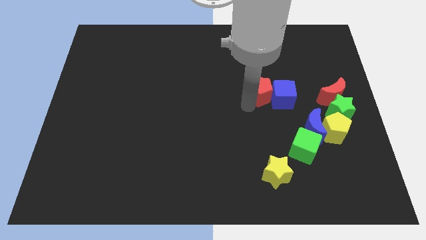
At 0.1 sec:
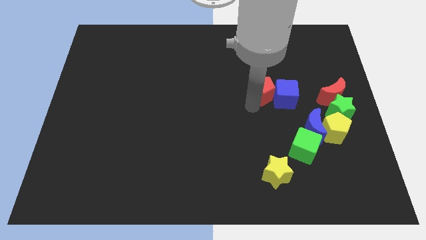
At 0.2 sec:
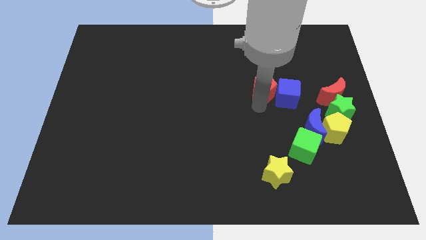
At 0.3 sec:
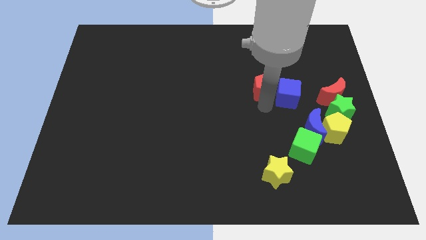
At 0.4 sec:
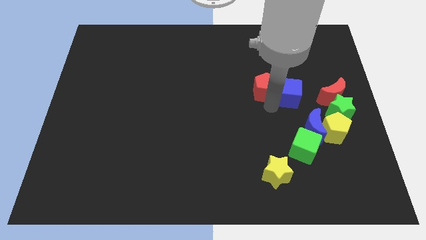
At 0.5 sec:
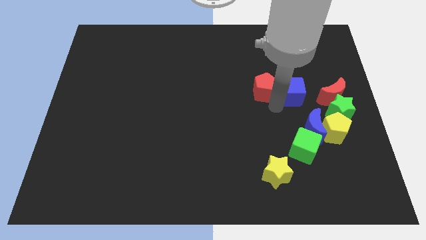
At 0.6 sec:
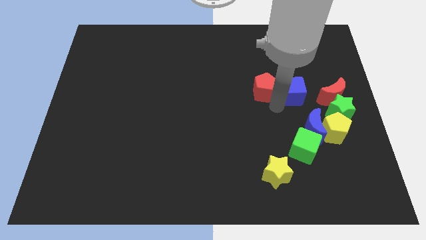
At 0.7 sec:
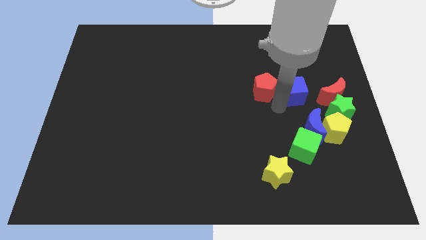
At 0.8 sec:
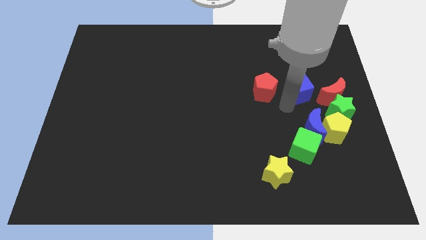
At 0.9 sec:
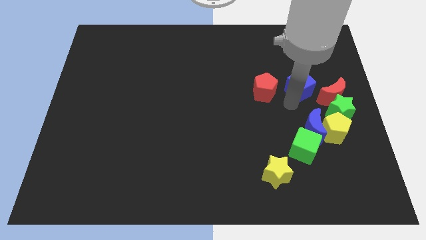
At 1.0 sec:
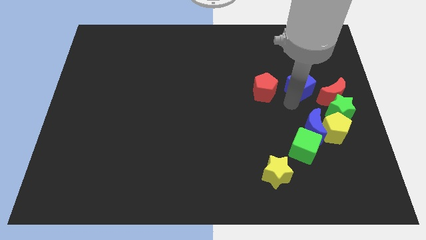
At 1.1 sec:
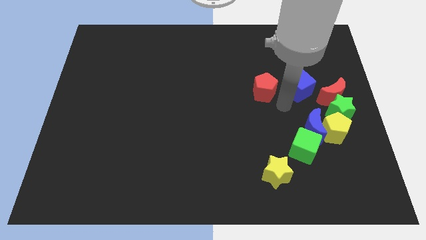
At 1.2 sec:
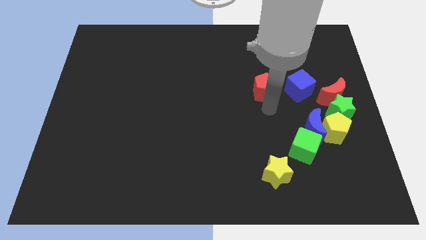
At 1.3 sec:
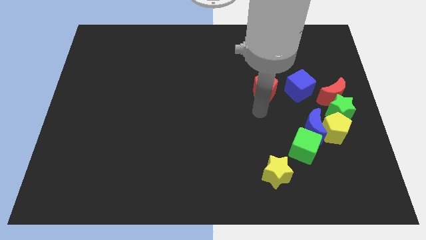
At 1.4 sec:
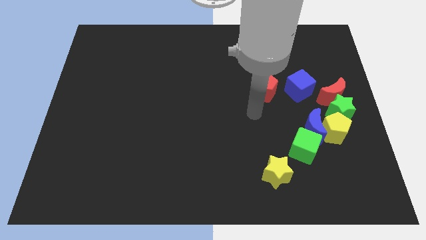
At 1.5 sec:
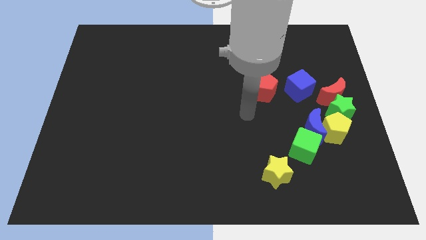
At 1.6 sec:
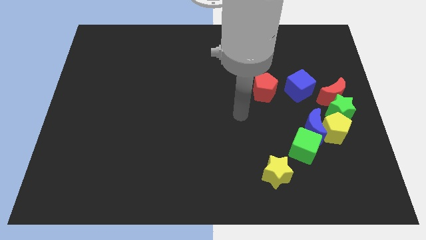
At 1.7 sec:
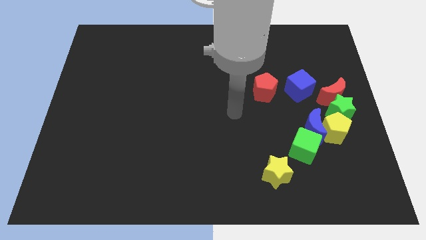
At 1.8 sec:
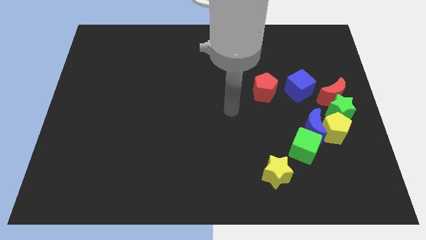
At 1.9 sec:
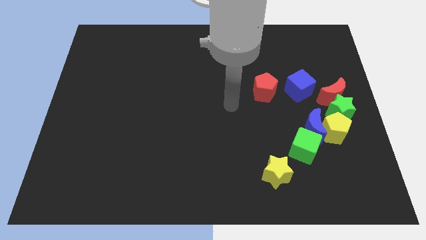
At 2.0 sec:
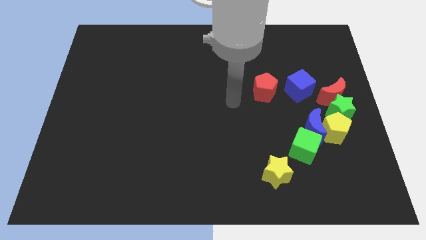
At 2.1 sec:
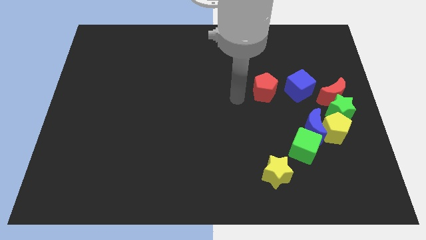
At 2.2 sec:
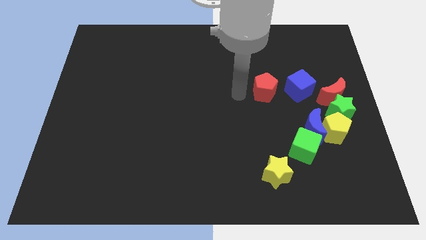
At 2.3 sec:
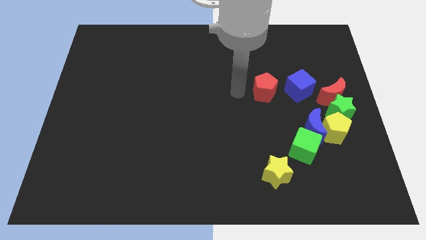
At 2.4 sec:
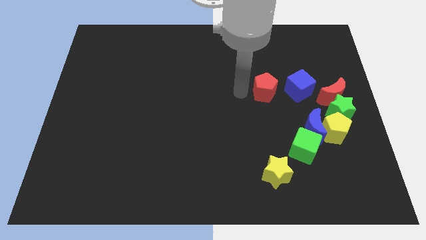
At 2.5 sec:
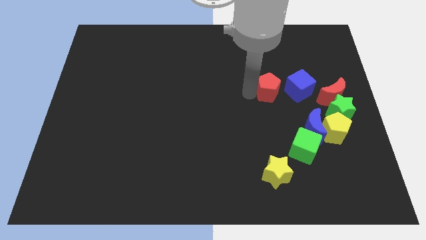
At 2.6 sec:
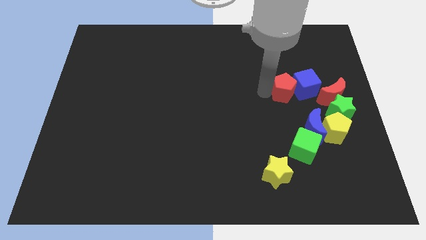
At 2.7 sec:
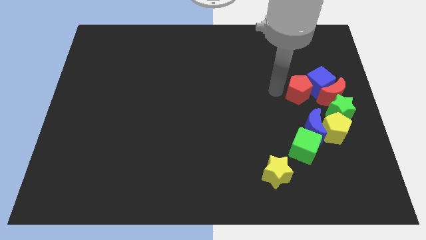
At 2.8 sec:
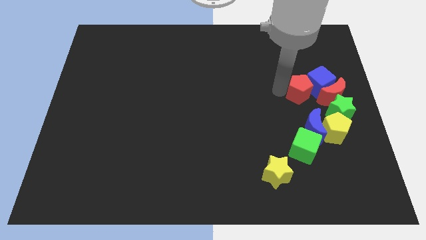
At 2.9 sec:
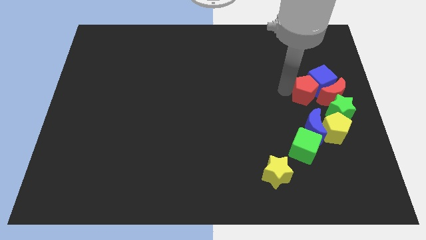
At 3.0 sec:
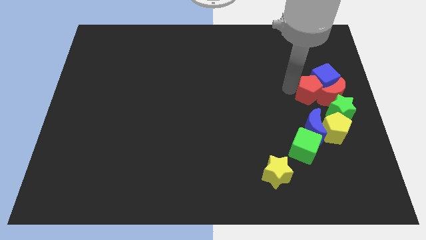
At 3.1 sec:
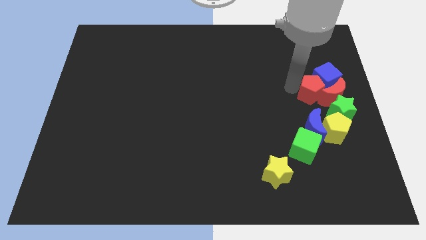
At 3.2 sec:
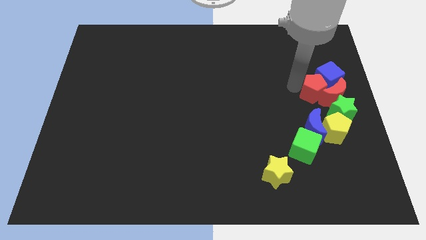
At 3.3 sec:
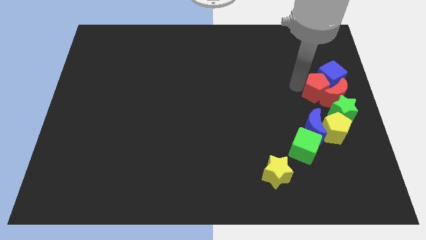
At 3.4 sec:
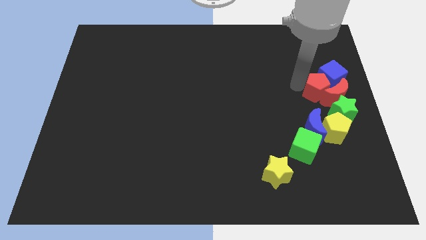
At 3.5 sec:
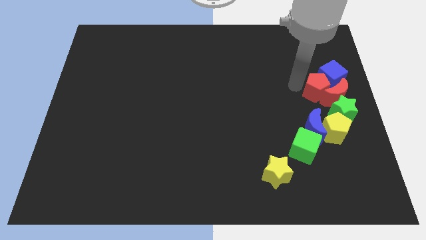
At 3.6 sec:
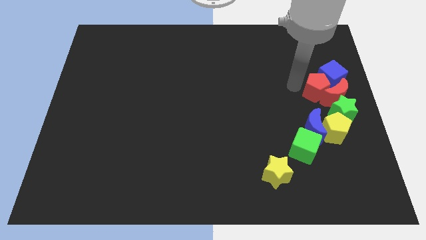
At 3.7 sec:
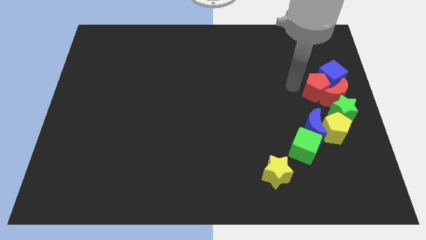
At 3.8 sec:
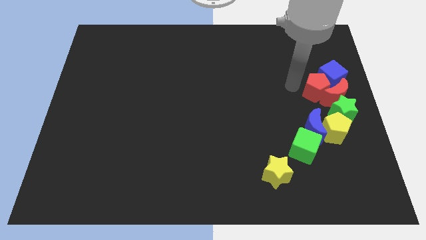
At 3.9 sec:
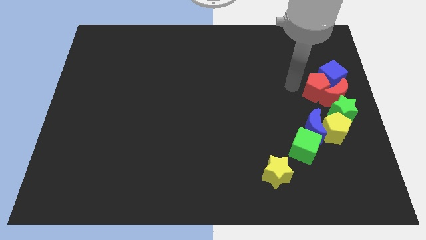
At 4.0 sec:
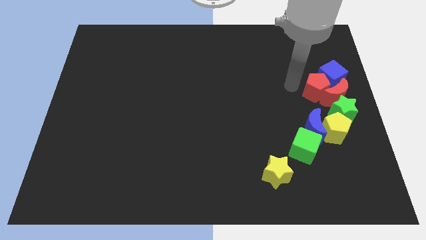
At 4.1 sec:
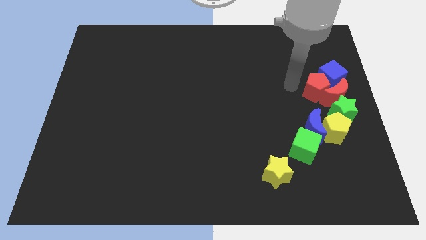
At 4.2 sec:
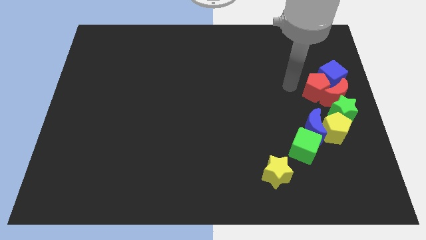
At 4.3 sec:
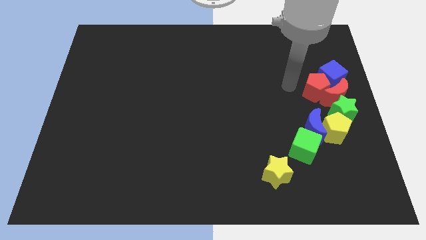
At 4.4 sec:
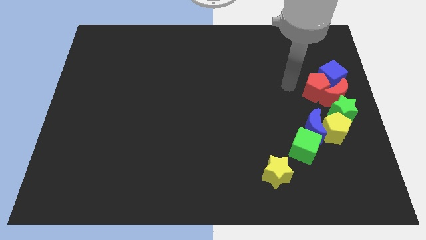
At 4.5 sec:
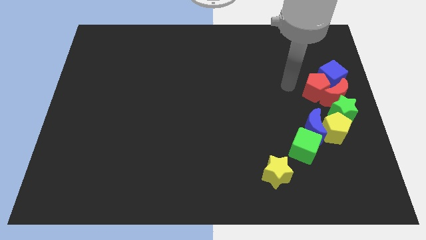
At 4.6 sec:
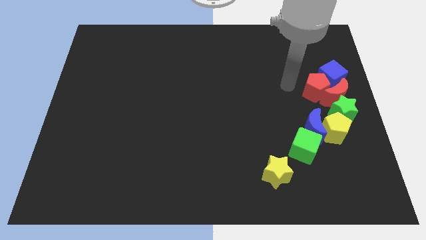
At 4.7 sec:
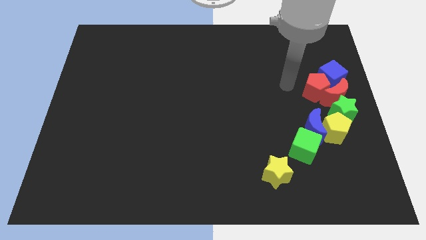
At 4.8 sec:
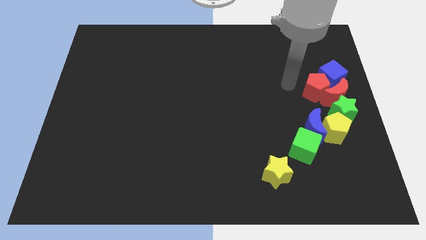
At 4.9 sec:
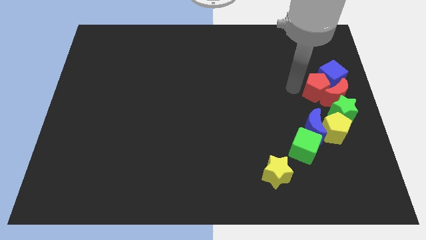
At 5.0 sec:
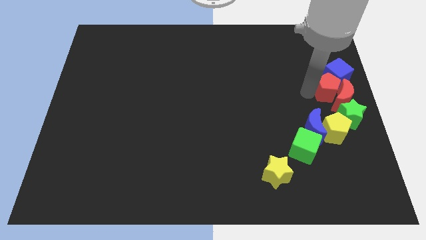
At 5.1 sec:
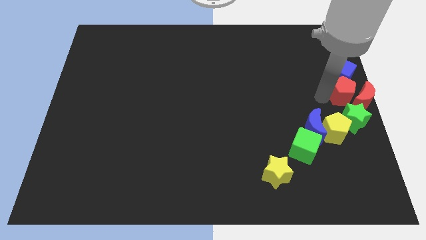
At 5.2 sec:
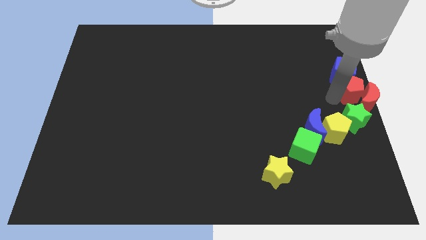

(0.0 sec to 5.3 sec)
push red pentagon close to red moon

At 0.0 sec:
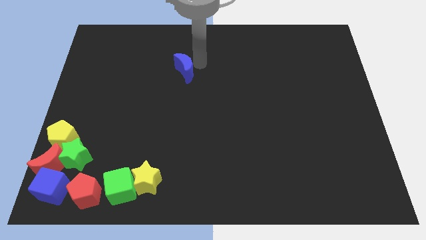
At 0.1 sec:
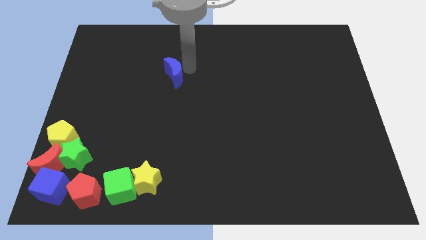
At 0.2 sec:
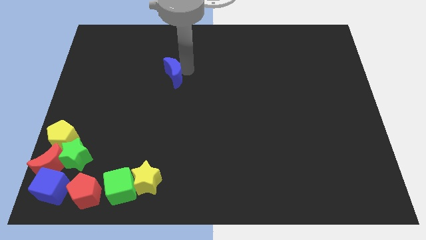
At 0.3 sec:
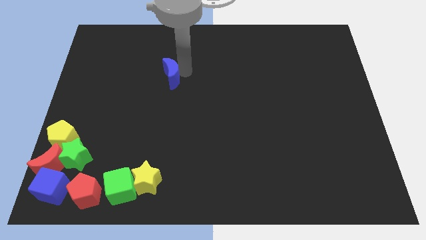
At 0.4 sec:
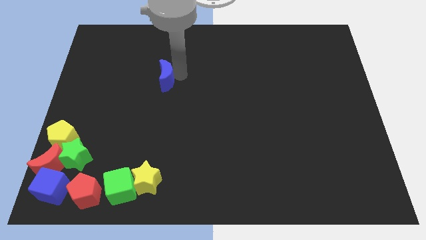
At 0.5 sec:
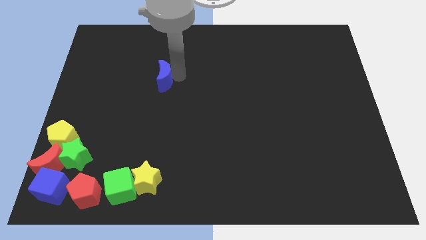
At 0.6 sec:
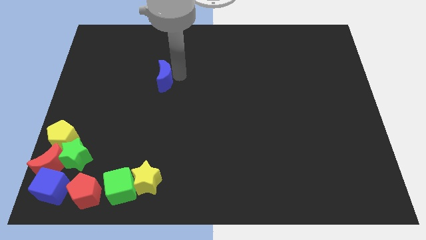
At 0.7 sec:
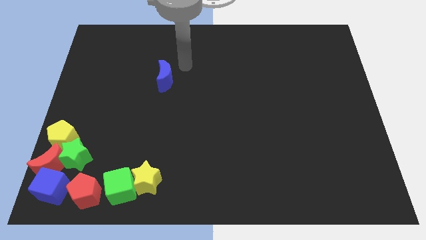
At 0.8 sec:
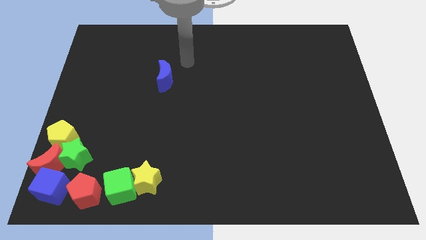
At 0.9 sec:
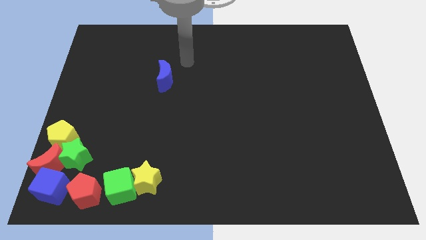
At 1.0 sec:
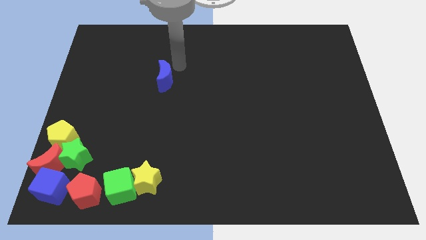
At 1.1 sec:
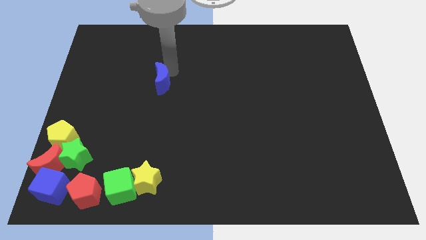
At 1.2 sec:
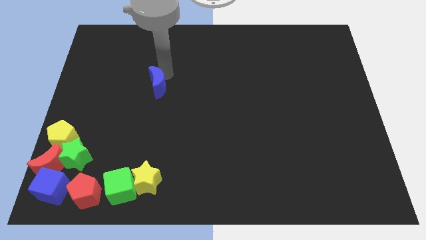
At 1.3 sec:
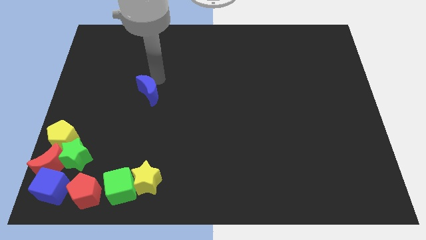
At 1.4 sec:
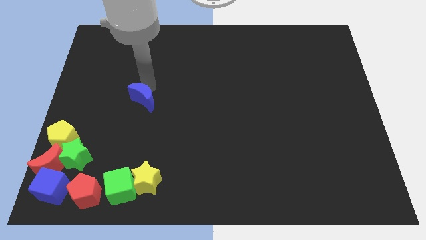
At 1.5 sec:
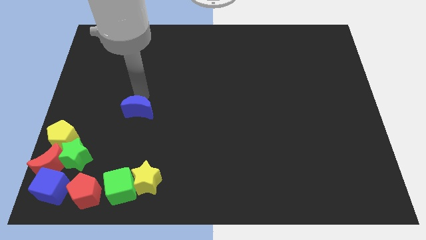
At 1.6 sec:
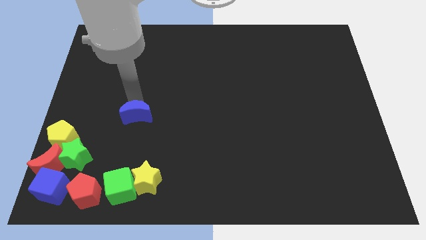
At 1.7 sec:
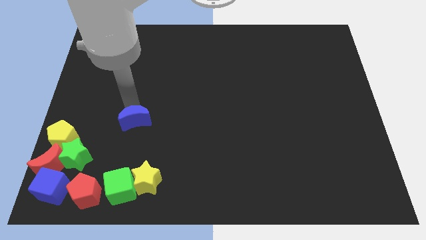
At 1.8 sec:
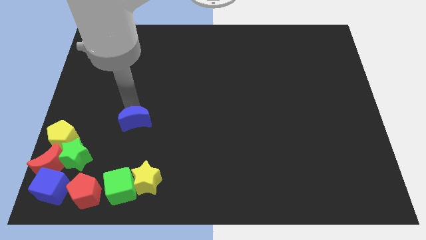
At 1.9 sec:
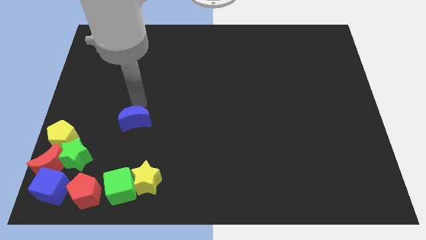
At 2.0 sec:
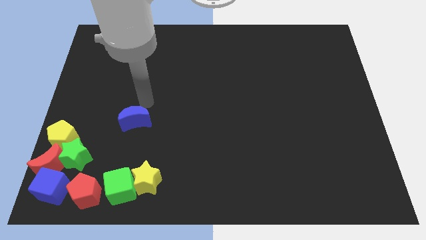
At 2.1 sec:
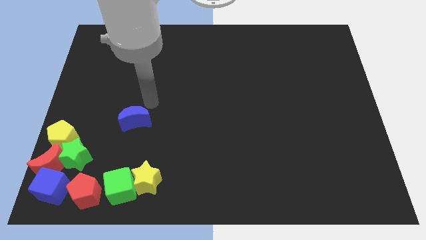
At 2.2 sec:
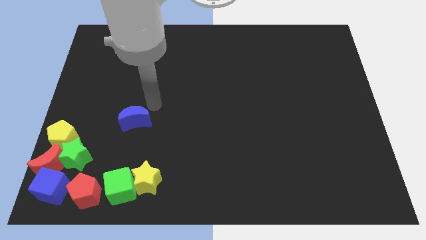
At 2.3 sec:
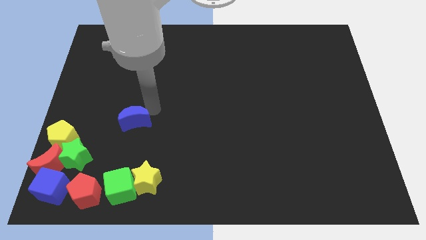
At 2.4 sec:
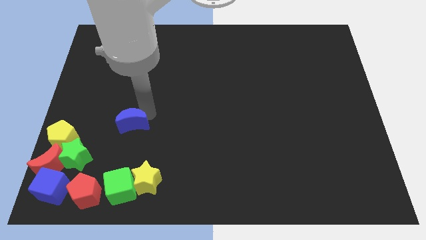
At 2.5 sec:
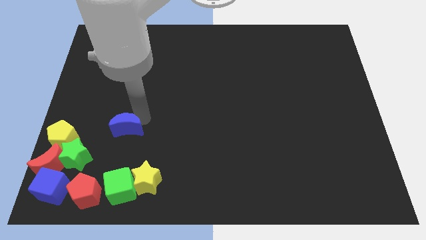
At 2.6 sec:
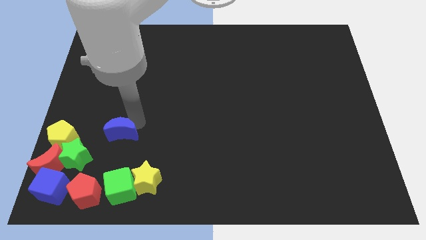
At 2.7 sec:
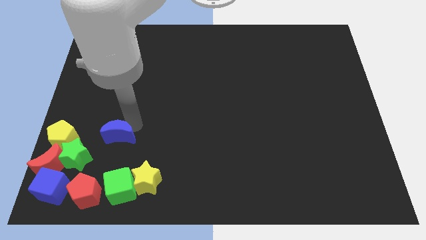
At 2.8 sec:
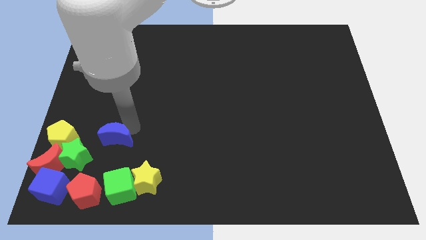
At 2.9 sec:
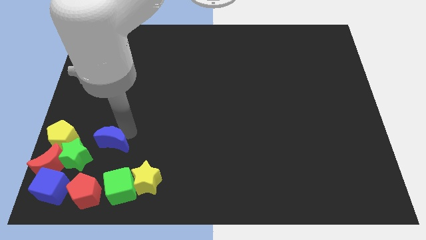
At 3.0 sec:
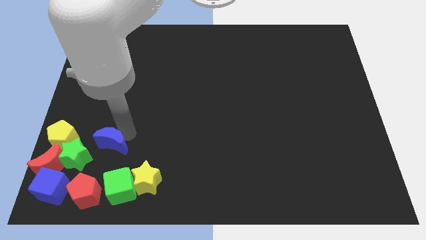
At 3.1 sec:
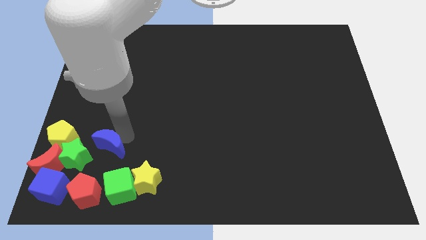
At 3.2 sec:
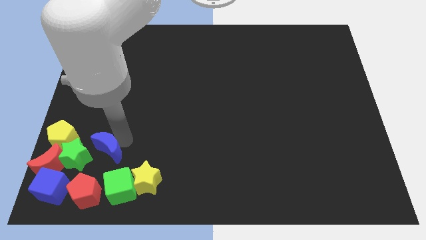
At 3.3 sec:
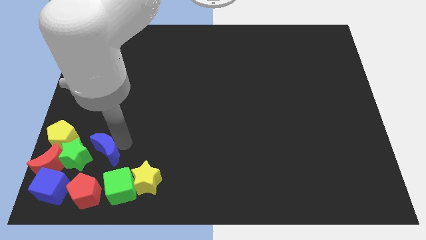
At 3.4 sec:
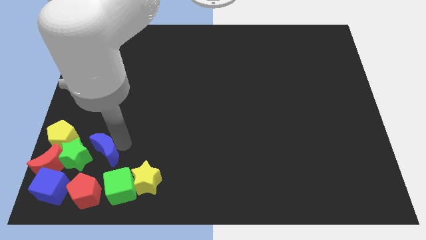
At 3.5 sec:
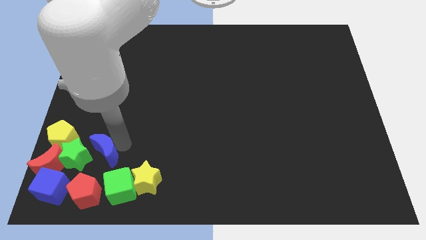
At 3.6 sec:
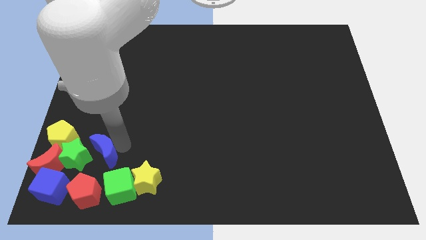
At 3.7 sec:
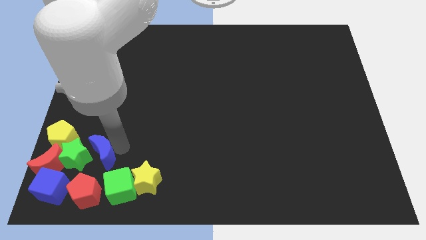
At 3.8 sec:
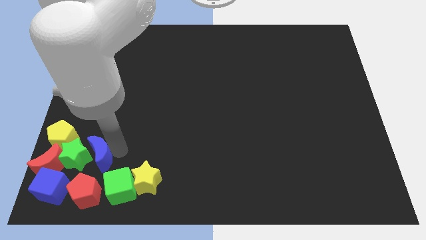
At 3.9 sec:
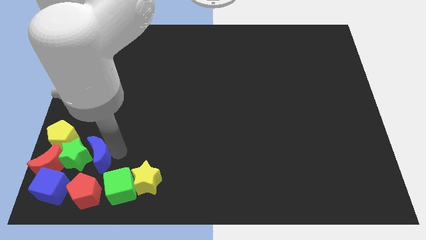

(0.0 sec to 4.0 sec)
place blue crescent close to the green star
